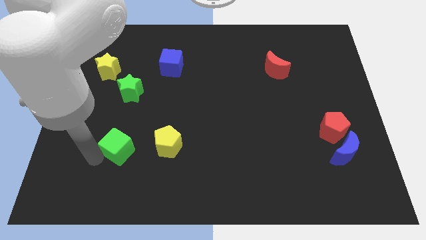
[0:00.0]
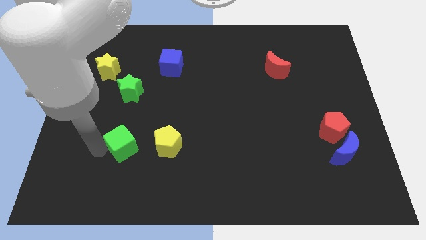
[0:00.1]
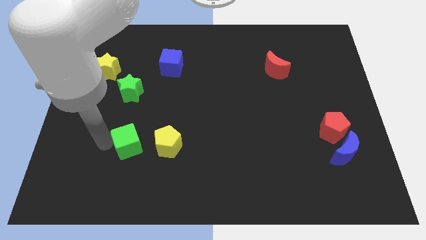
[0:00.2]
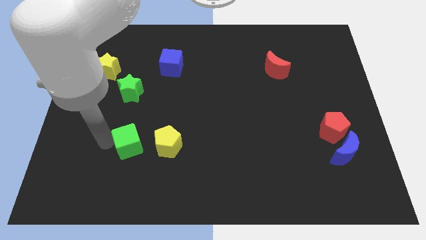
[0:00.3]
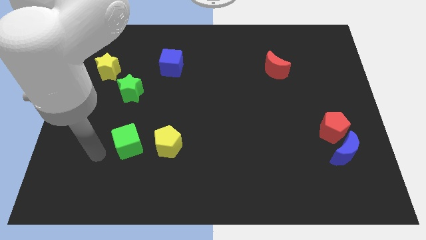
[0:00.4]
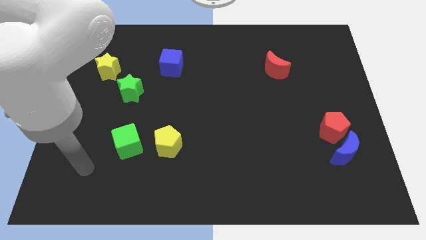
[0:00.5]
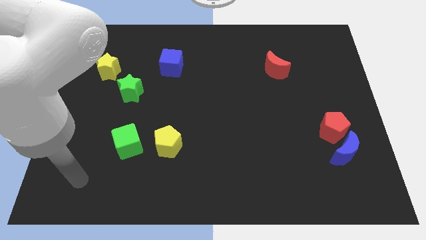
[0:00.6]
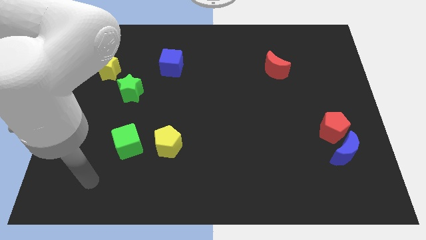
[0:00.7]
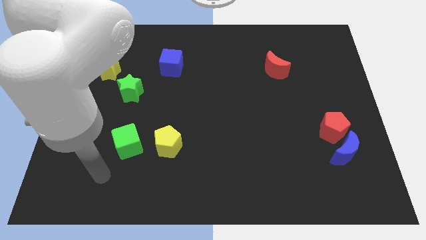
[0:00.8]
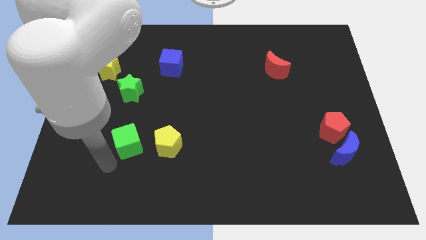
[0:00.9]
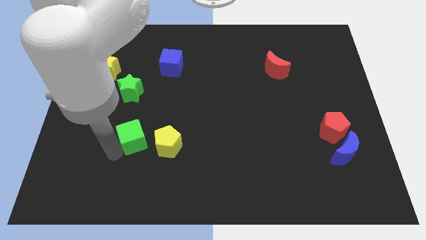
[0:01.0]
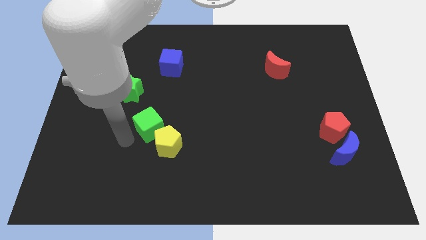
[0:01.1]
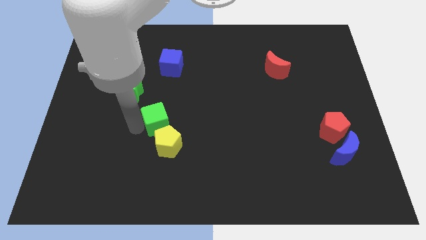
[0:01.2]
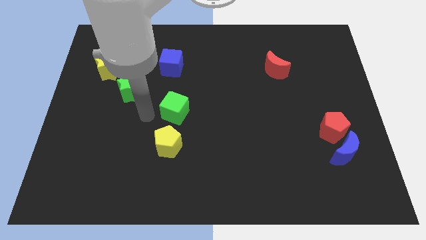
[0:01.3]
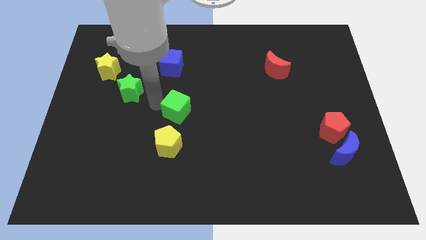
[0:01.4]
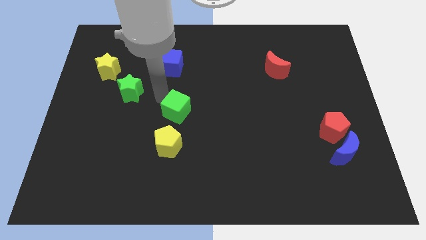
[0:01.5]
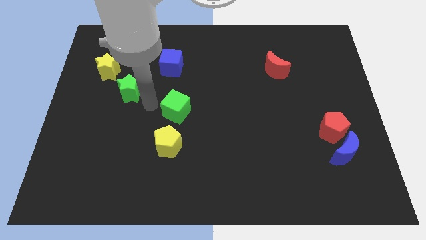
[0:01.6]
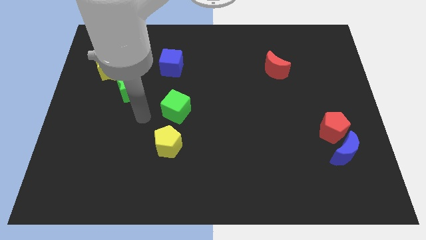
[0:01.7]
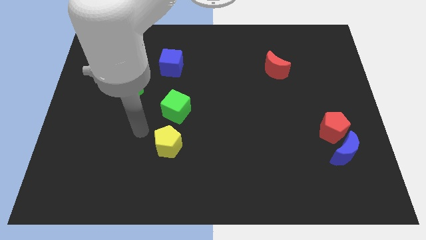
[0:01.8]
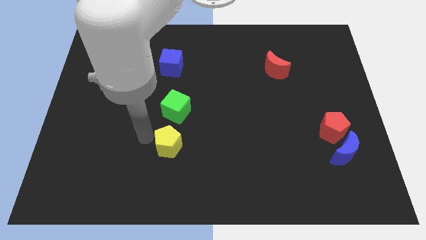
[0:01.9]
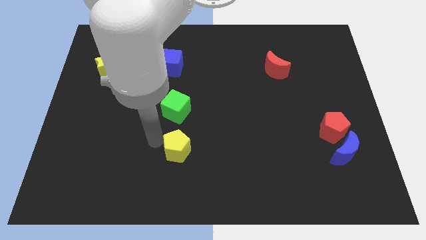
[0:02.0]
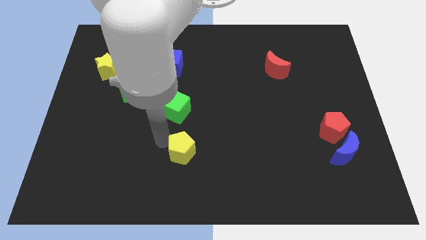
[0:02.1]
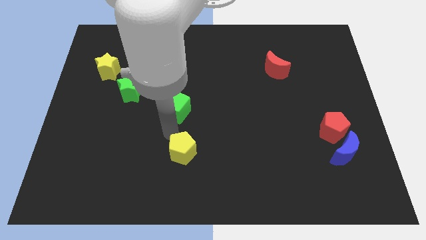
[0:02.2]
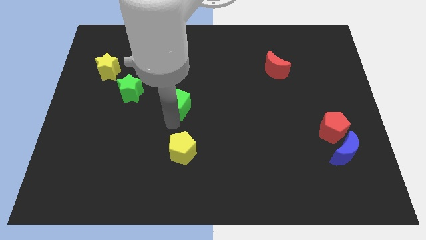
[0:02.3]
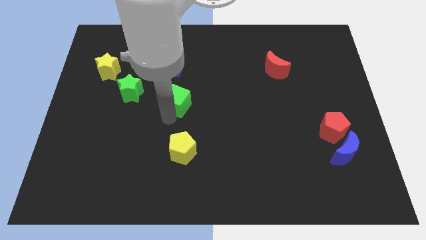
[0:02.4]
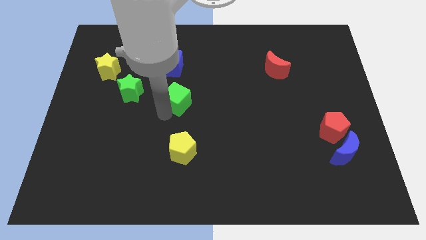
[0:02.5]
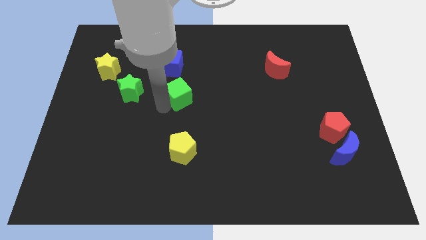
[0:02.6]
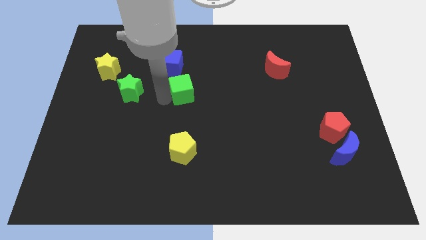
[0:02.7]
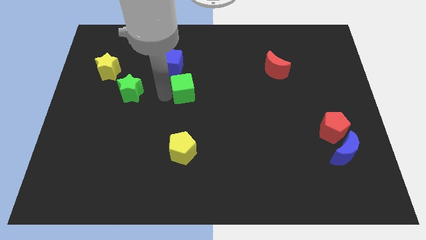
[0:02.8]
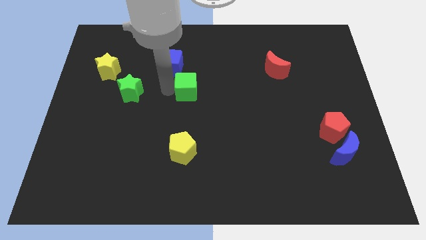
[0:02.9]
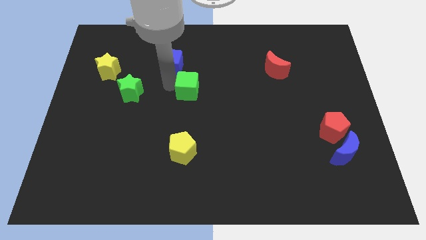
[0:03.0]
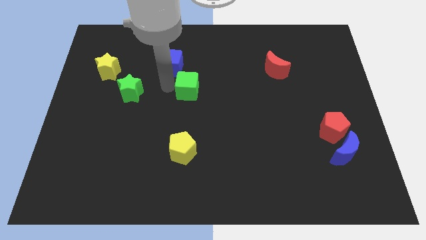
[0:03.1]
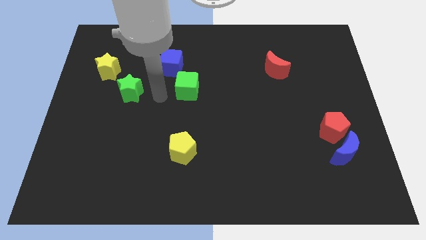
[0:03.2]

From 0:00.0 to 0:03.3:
put the green cube to the right of the green star

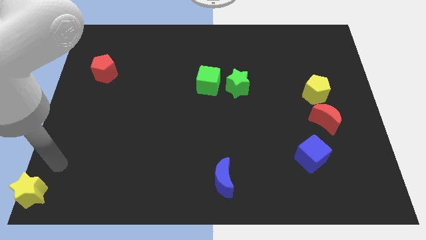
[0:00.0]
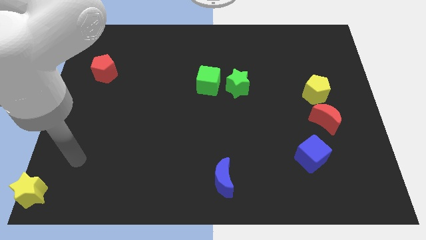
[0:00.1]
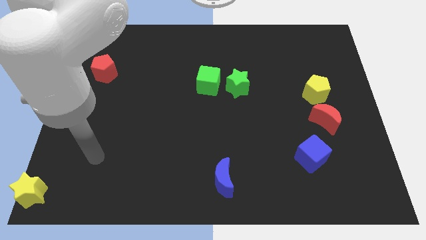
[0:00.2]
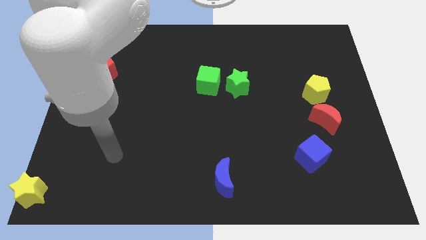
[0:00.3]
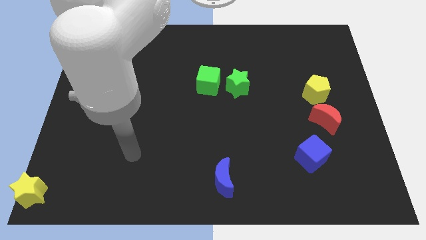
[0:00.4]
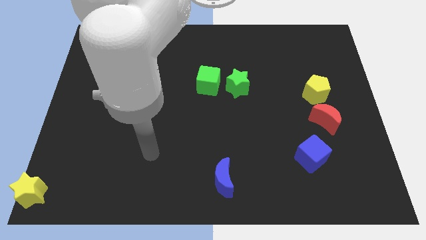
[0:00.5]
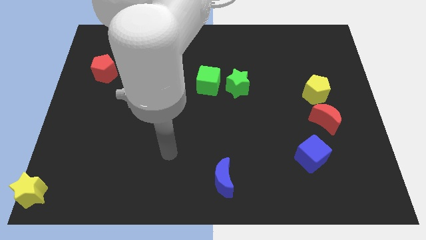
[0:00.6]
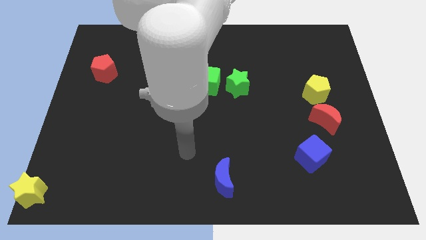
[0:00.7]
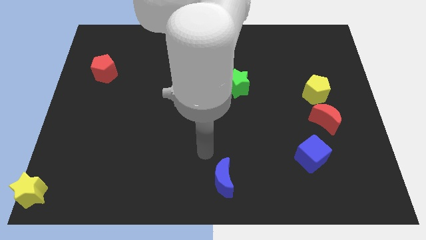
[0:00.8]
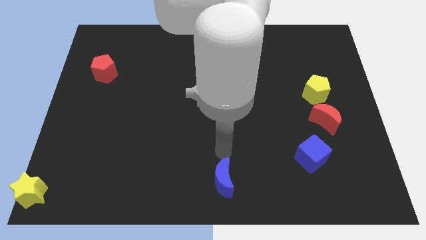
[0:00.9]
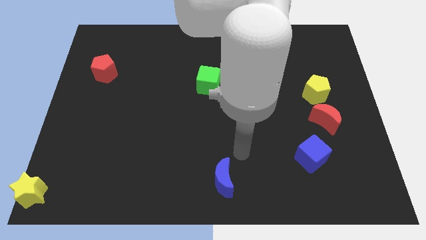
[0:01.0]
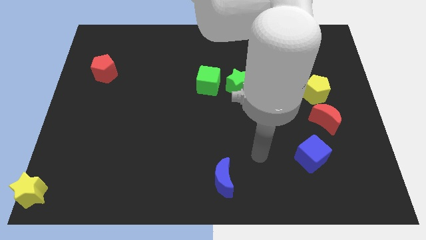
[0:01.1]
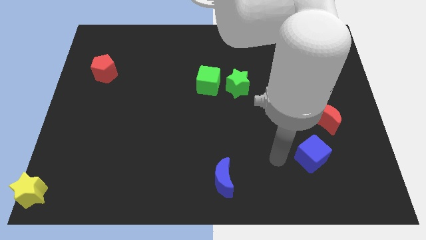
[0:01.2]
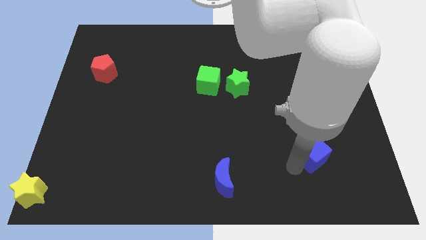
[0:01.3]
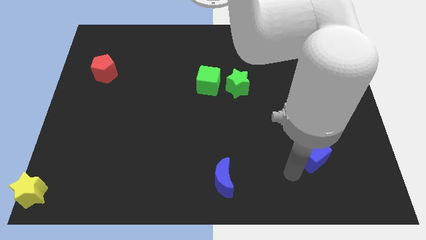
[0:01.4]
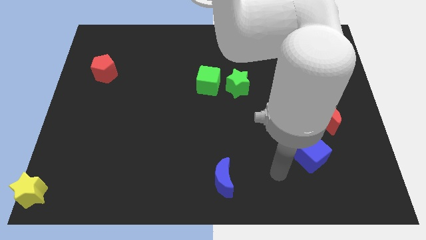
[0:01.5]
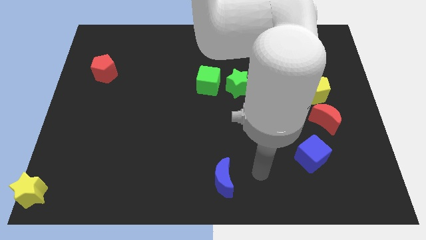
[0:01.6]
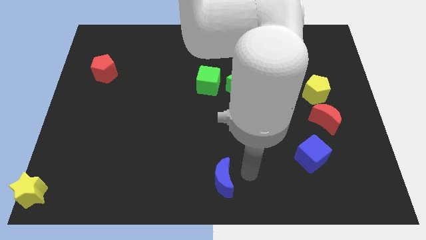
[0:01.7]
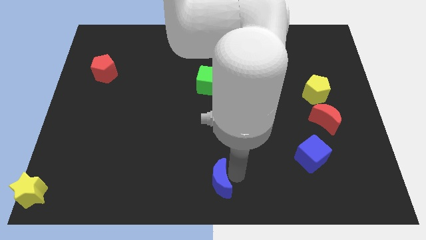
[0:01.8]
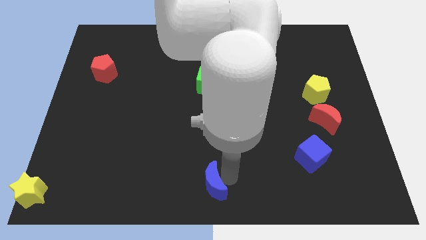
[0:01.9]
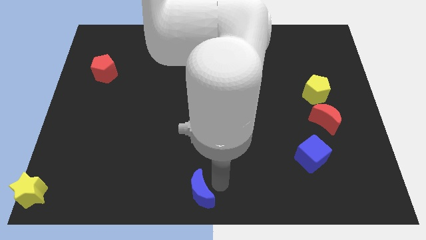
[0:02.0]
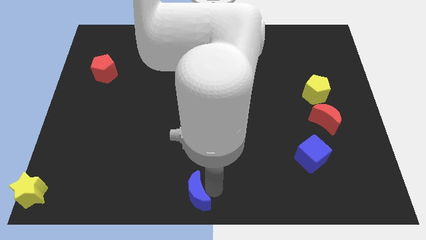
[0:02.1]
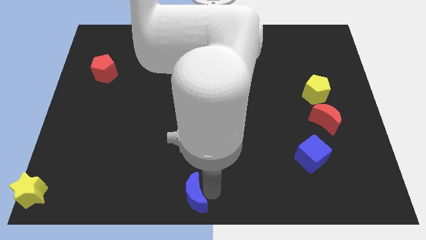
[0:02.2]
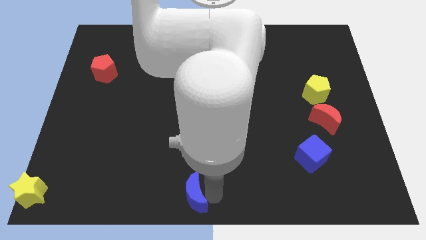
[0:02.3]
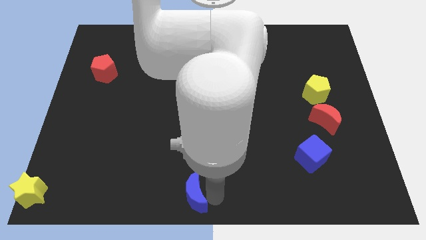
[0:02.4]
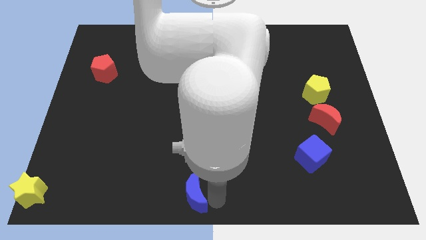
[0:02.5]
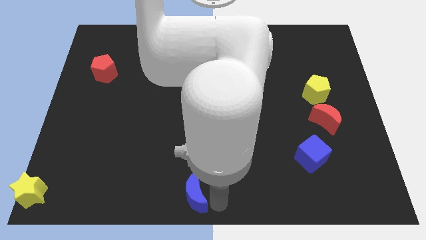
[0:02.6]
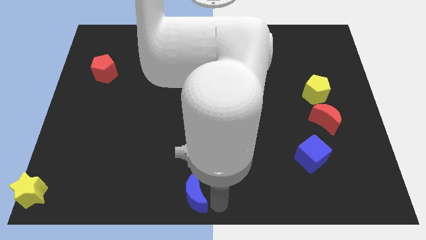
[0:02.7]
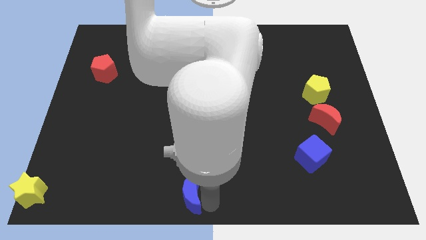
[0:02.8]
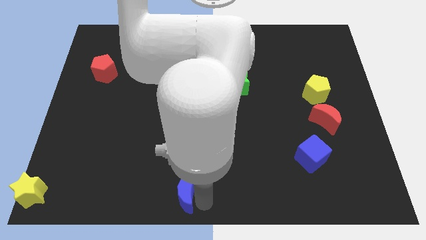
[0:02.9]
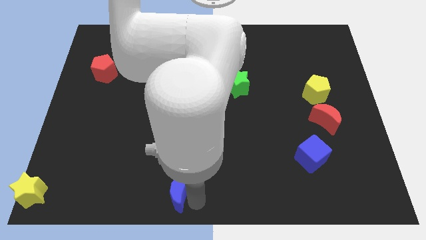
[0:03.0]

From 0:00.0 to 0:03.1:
move the blue crescent to the bottom center of the board

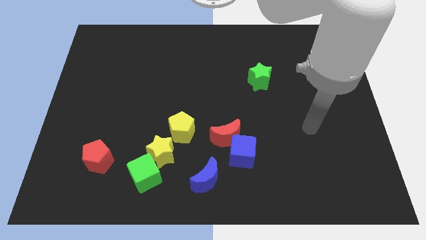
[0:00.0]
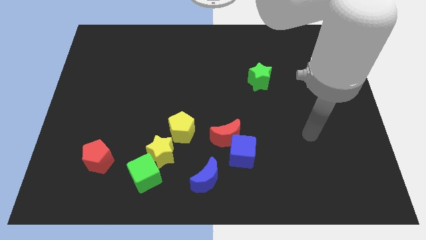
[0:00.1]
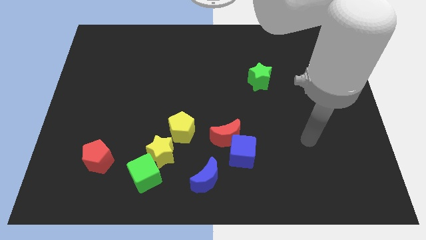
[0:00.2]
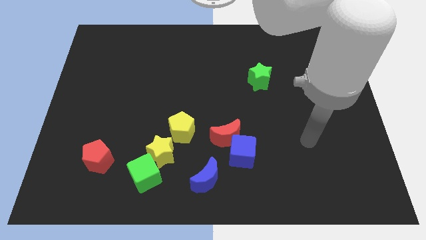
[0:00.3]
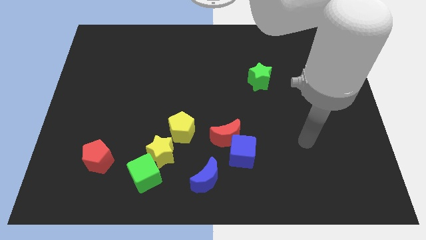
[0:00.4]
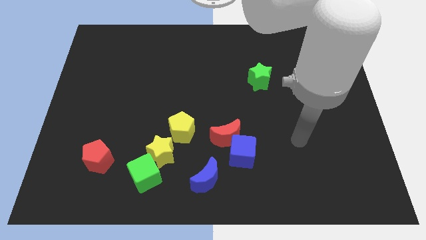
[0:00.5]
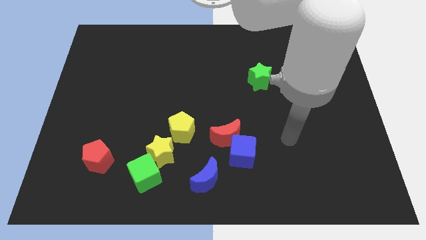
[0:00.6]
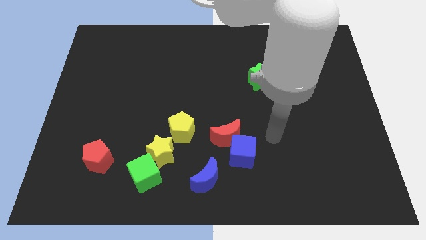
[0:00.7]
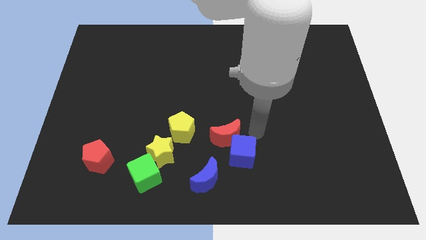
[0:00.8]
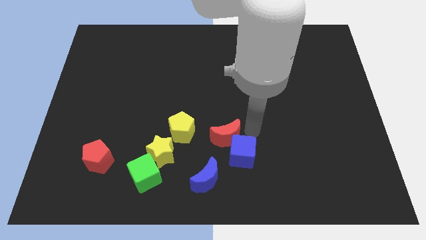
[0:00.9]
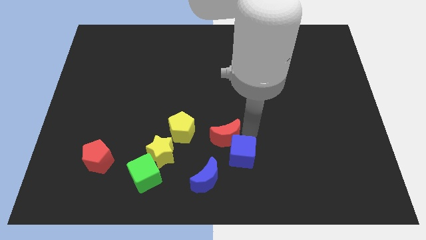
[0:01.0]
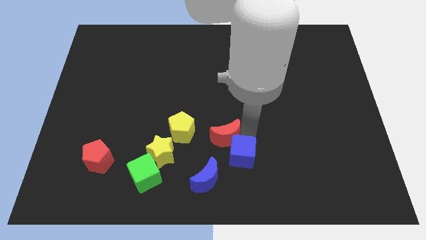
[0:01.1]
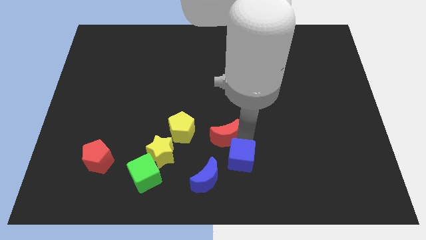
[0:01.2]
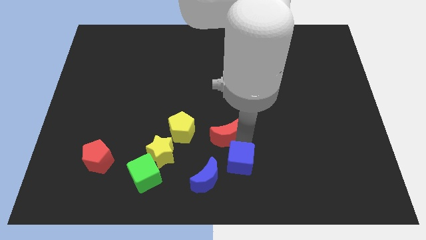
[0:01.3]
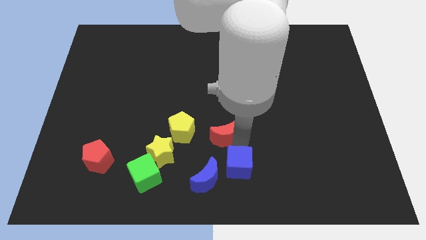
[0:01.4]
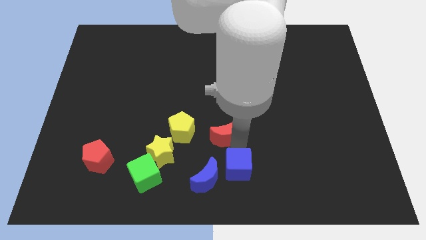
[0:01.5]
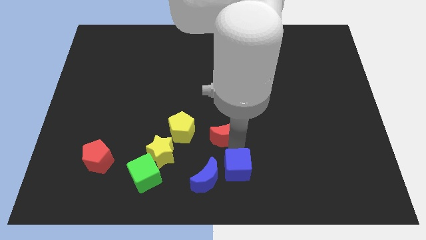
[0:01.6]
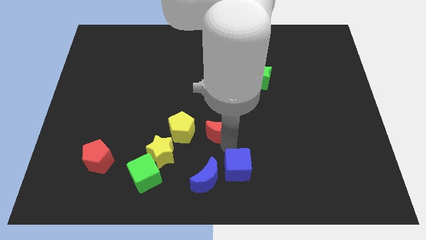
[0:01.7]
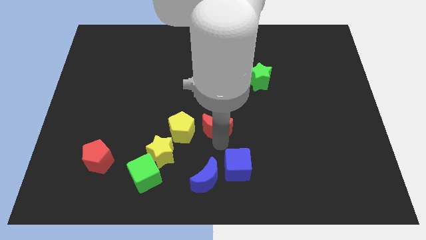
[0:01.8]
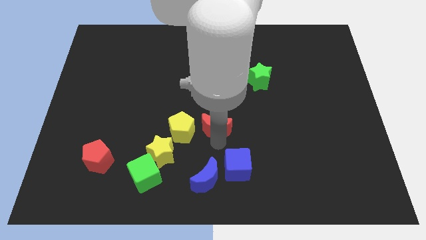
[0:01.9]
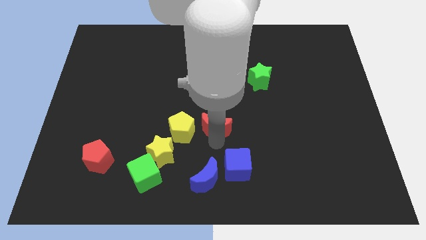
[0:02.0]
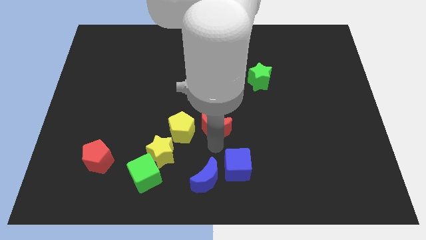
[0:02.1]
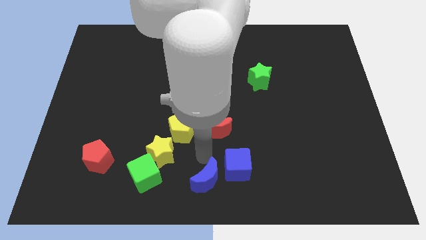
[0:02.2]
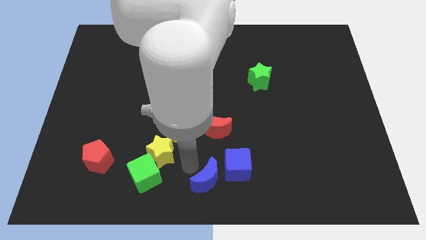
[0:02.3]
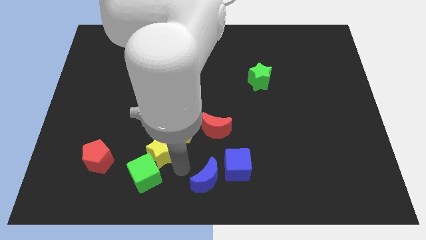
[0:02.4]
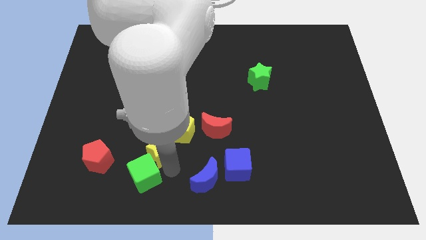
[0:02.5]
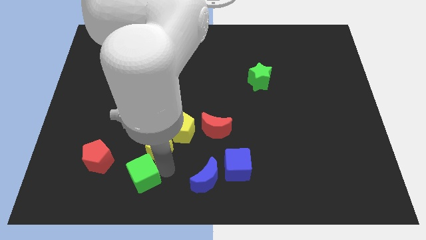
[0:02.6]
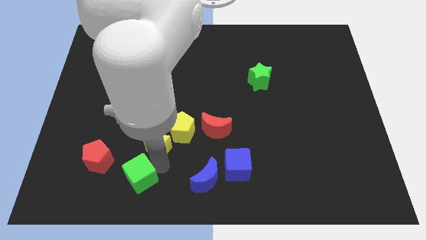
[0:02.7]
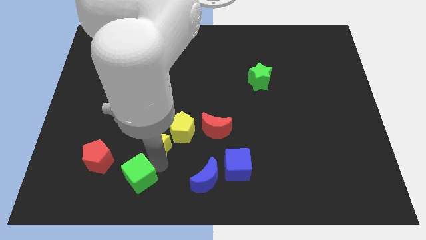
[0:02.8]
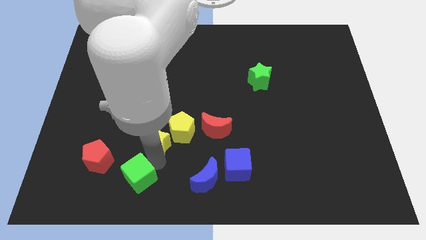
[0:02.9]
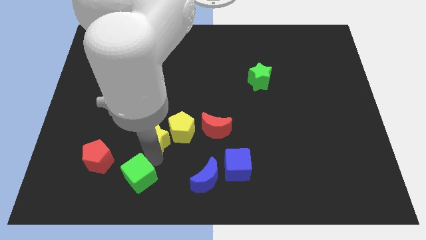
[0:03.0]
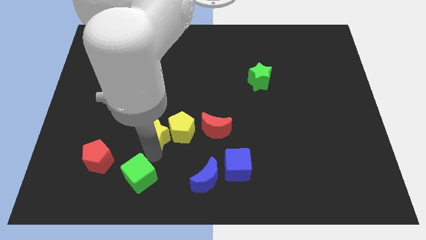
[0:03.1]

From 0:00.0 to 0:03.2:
move arm to the green cube
